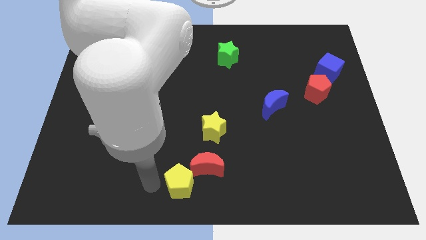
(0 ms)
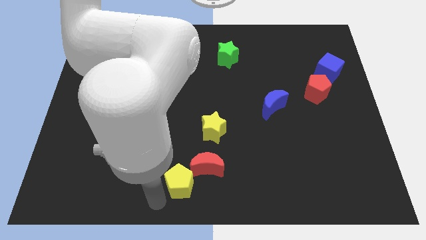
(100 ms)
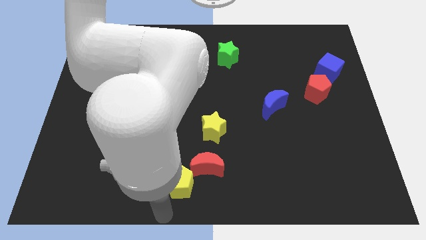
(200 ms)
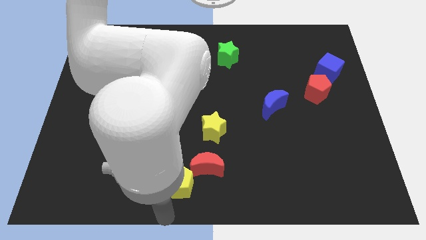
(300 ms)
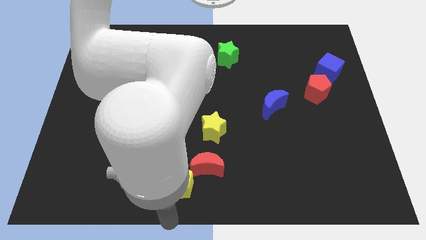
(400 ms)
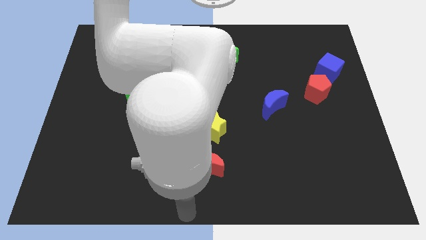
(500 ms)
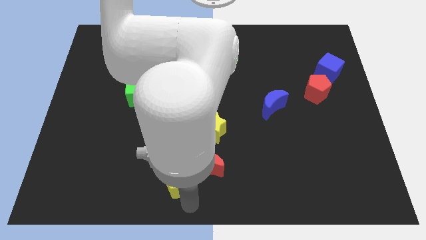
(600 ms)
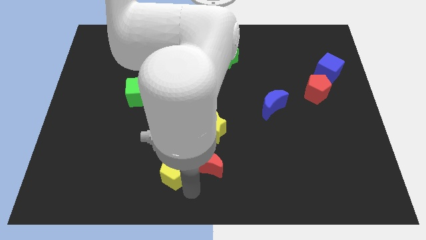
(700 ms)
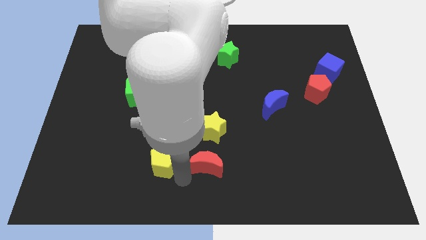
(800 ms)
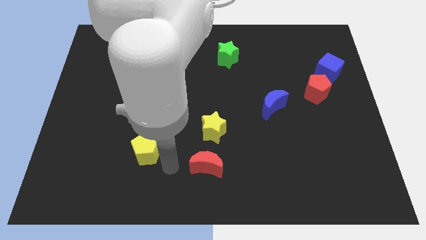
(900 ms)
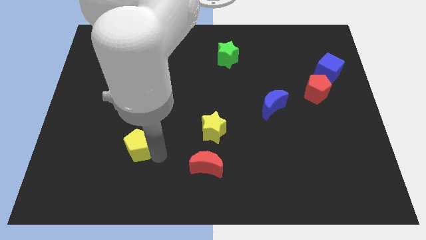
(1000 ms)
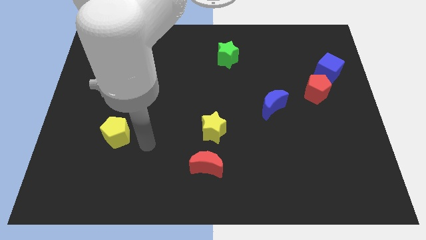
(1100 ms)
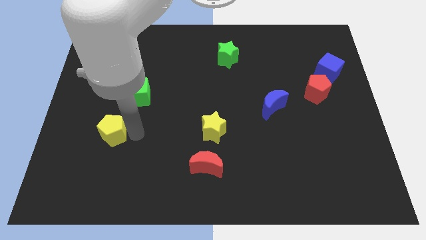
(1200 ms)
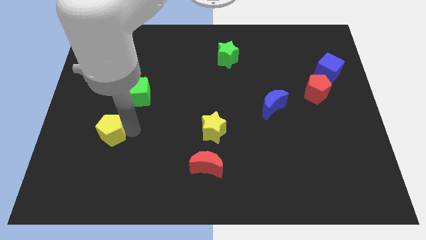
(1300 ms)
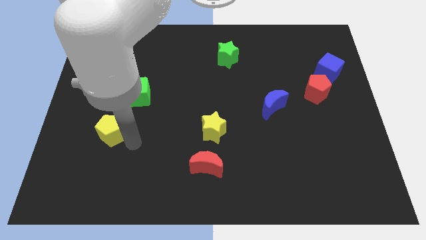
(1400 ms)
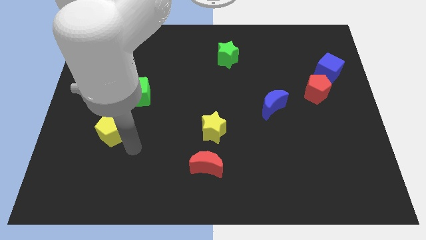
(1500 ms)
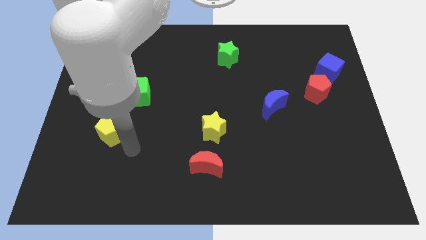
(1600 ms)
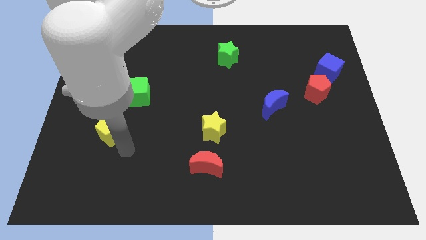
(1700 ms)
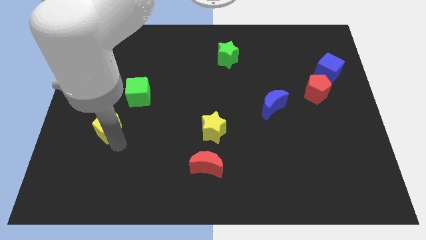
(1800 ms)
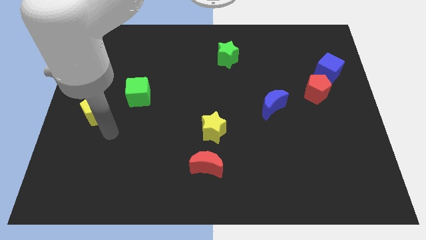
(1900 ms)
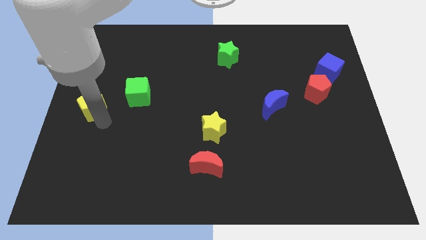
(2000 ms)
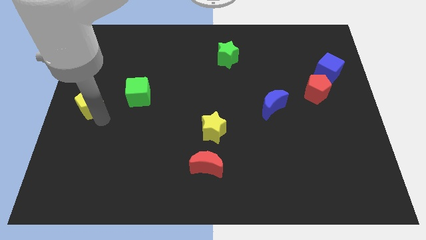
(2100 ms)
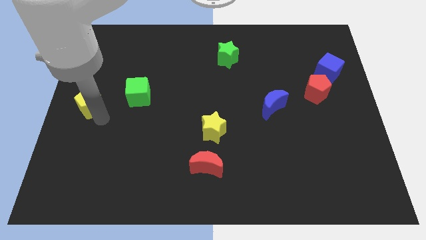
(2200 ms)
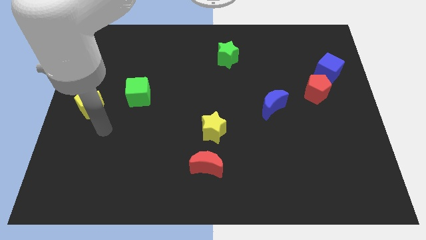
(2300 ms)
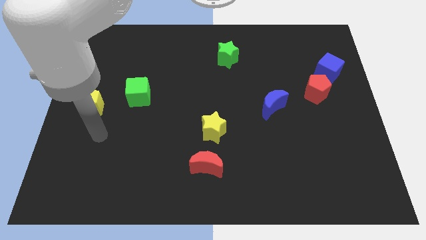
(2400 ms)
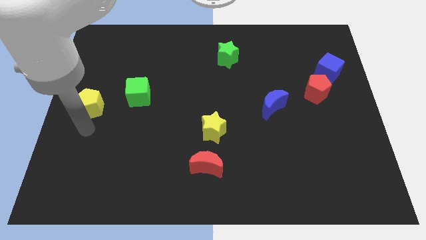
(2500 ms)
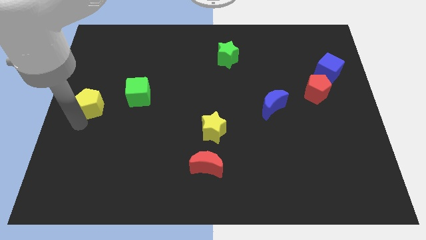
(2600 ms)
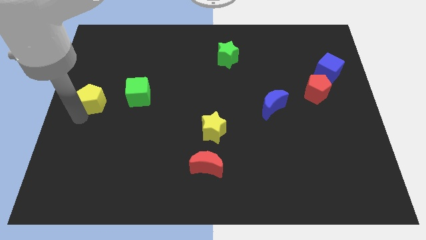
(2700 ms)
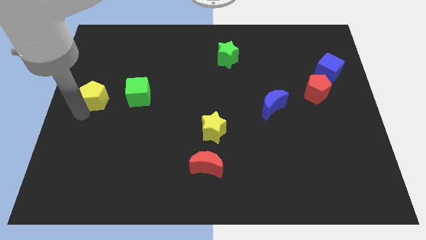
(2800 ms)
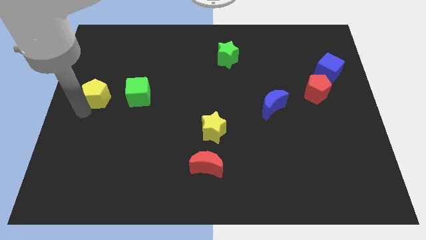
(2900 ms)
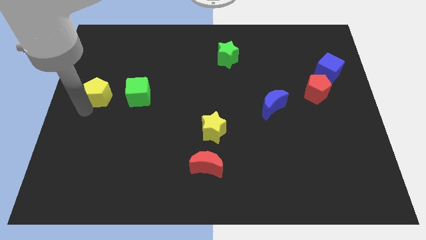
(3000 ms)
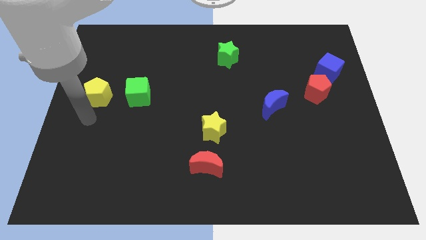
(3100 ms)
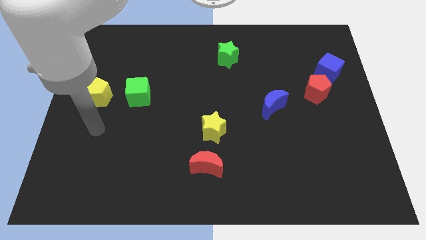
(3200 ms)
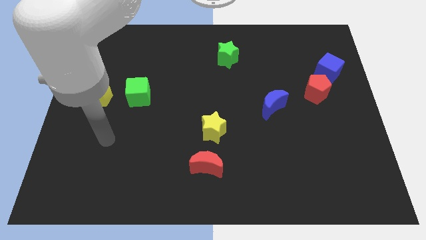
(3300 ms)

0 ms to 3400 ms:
move the yellow pentagon to the left center

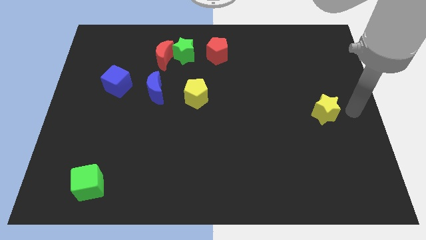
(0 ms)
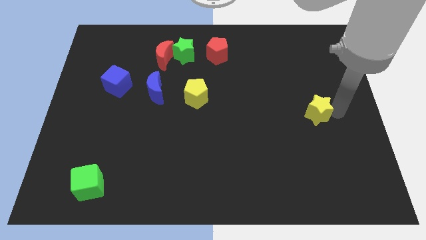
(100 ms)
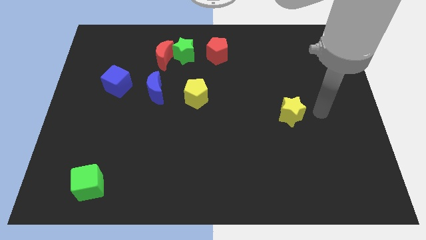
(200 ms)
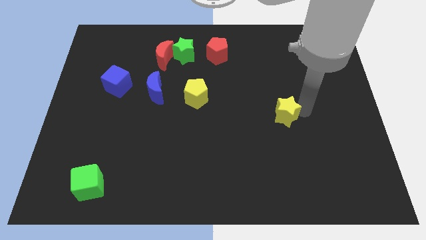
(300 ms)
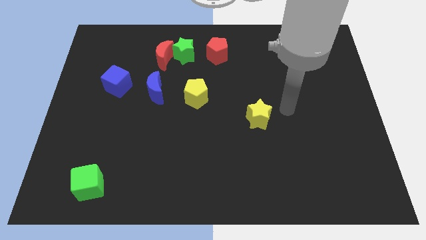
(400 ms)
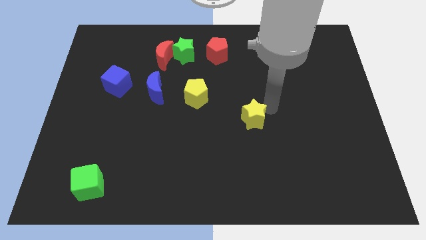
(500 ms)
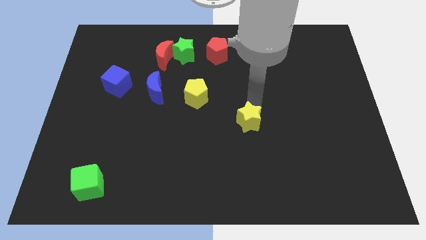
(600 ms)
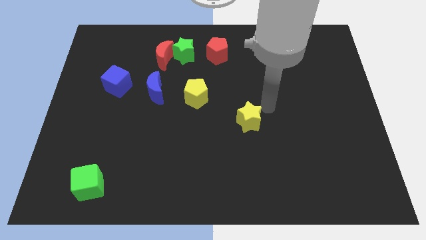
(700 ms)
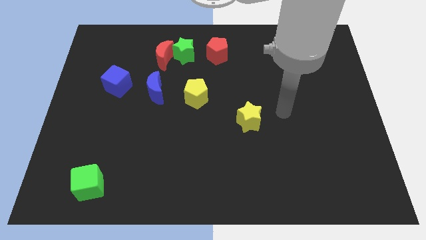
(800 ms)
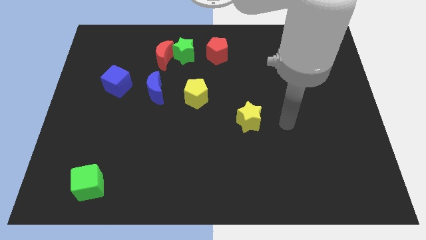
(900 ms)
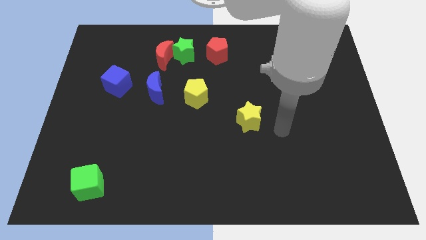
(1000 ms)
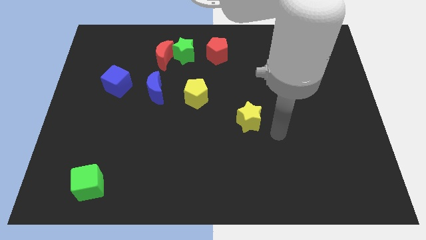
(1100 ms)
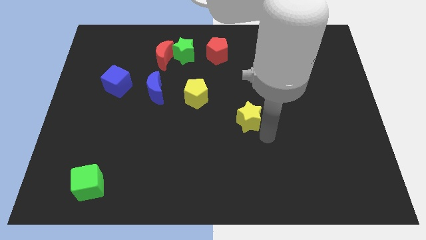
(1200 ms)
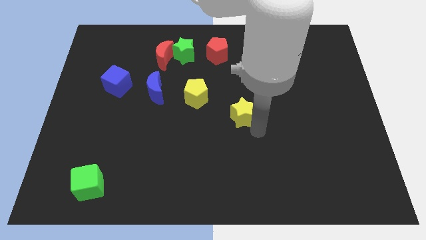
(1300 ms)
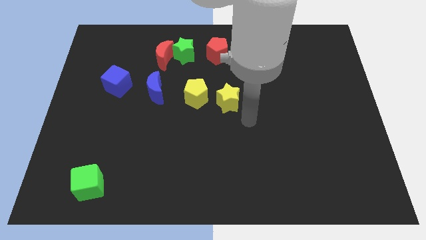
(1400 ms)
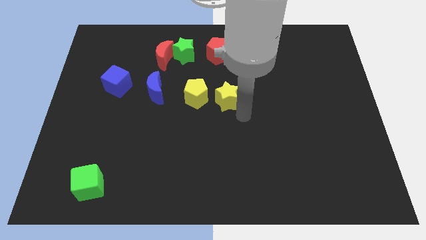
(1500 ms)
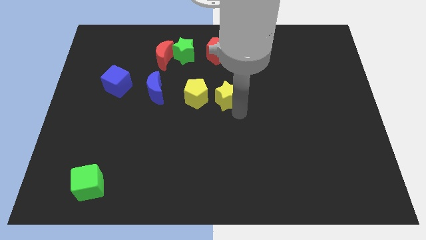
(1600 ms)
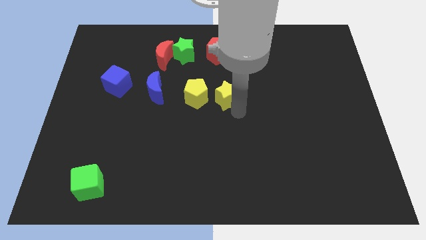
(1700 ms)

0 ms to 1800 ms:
place the yellow star to the right side of the yellow pentagon

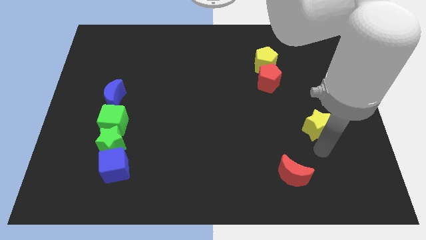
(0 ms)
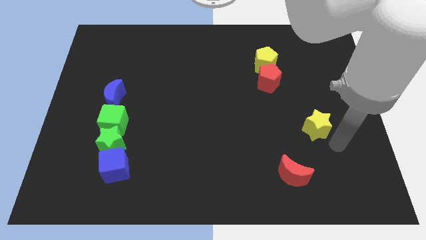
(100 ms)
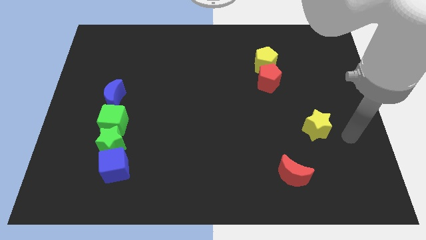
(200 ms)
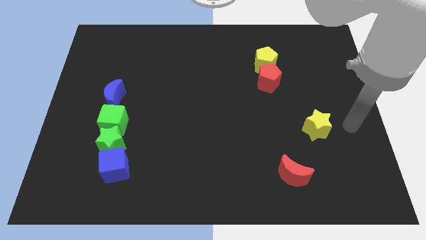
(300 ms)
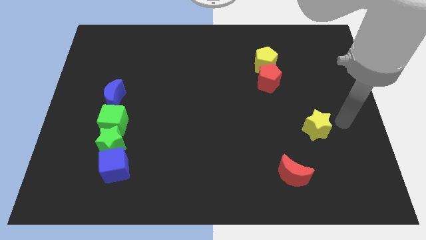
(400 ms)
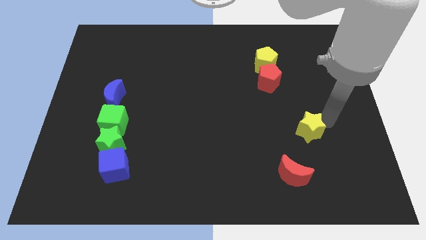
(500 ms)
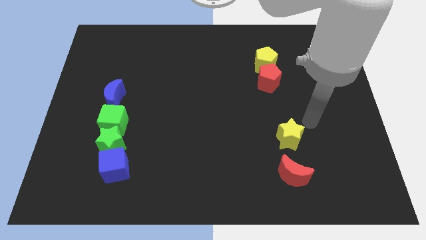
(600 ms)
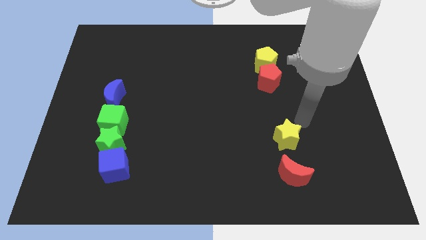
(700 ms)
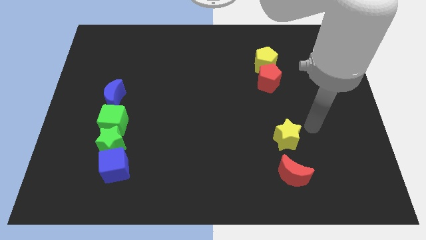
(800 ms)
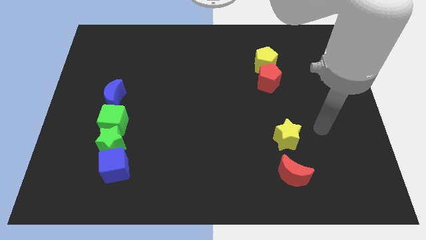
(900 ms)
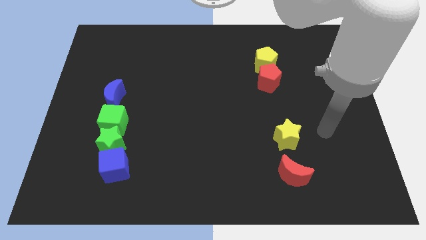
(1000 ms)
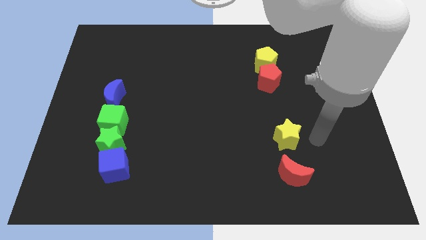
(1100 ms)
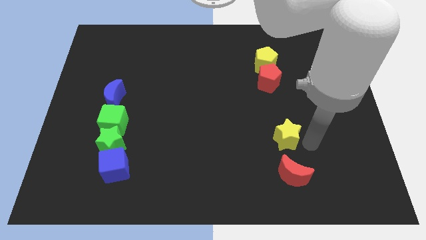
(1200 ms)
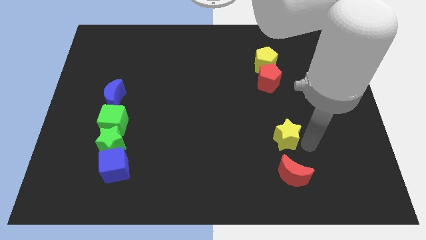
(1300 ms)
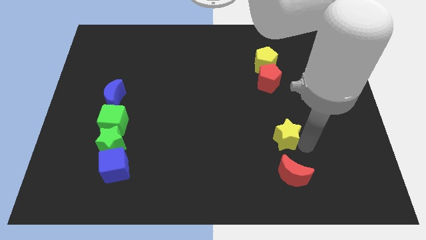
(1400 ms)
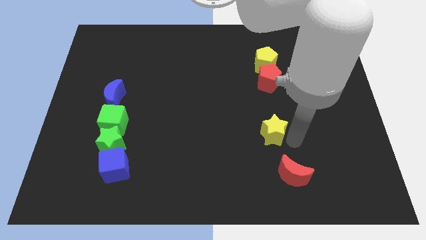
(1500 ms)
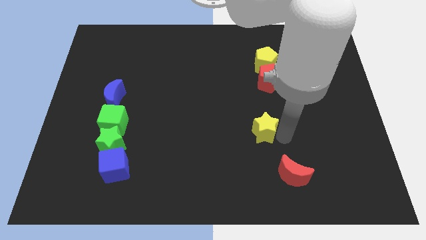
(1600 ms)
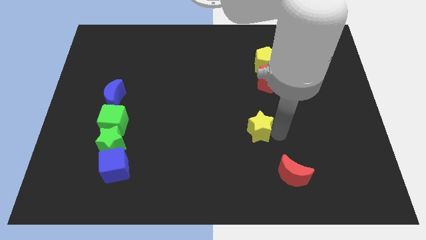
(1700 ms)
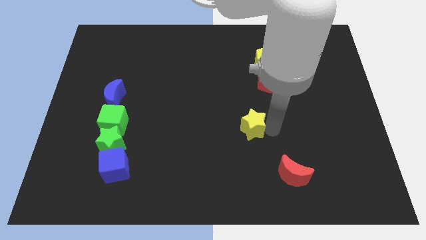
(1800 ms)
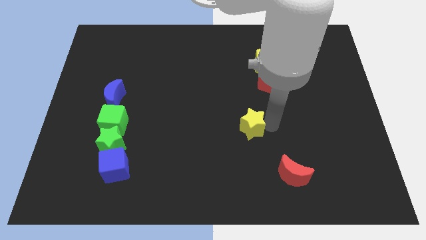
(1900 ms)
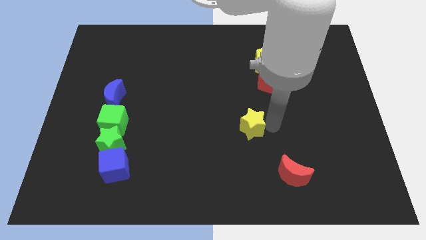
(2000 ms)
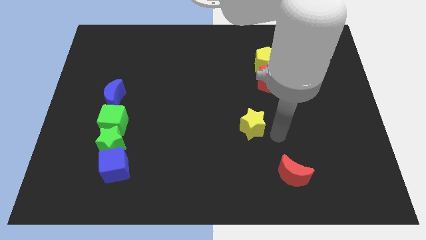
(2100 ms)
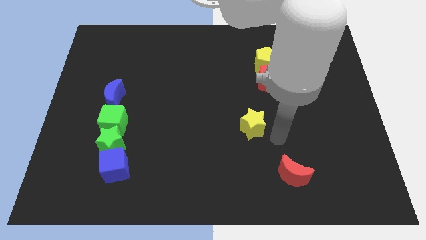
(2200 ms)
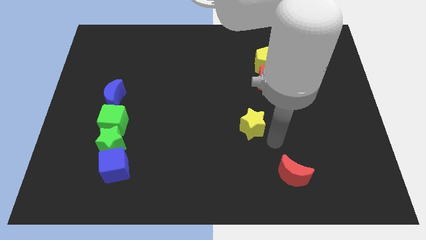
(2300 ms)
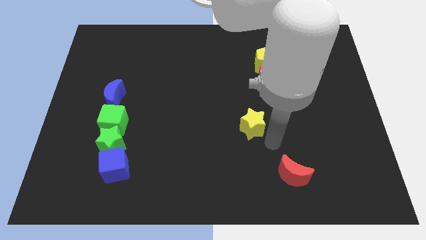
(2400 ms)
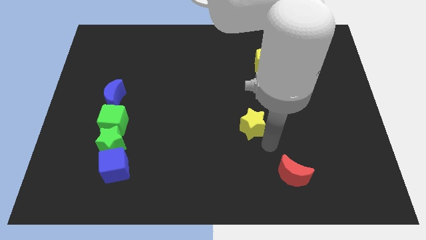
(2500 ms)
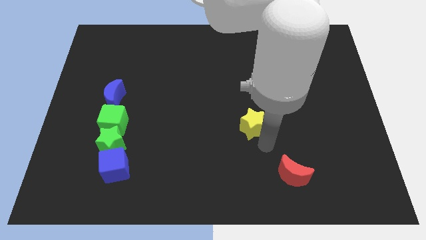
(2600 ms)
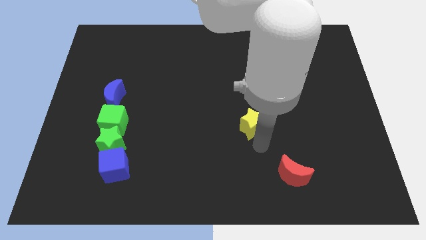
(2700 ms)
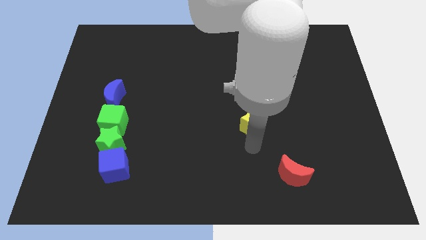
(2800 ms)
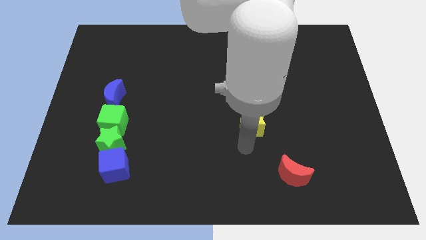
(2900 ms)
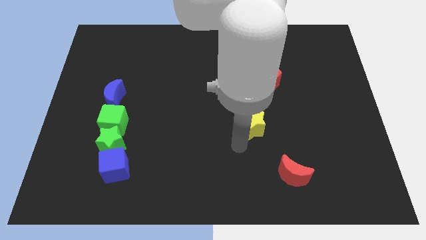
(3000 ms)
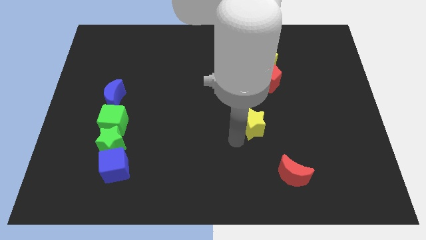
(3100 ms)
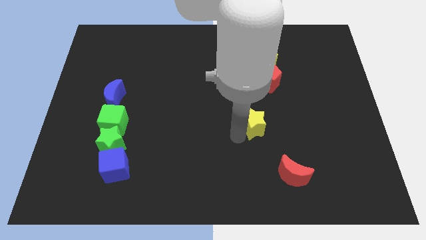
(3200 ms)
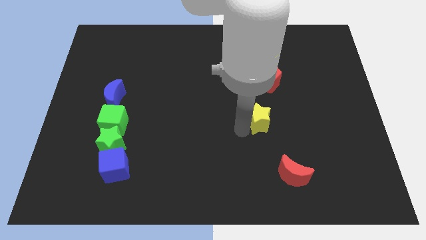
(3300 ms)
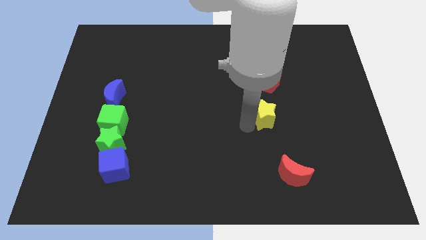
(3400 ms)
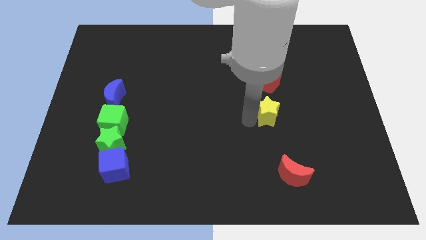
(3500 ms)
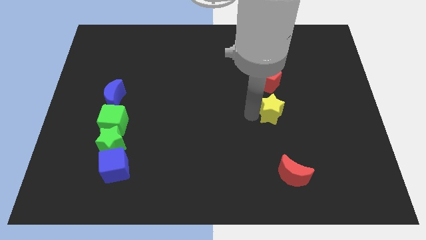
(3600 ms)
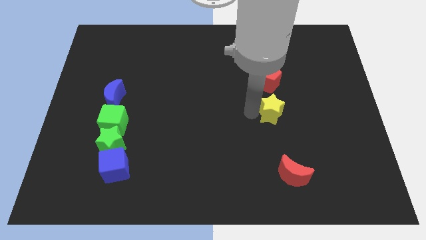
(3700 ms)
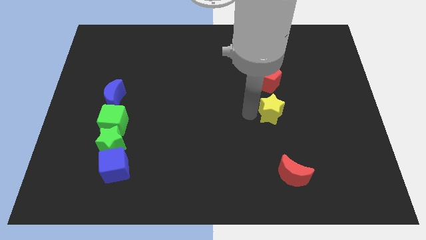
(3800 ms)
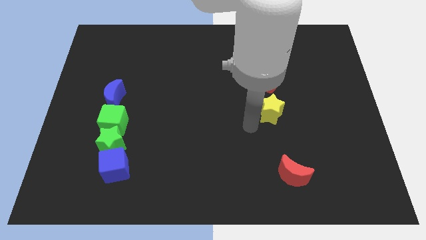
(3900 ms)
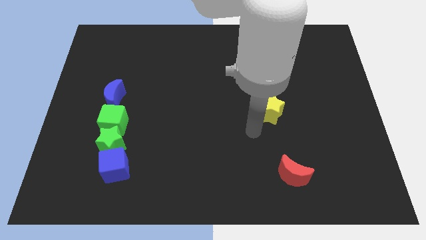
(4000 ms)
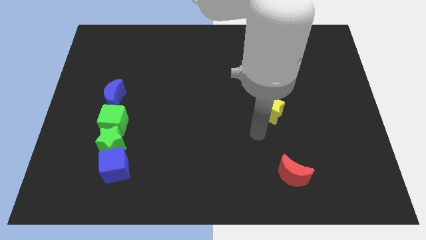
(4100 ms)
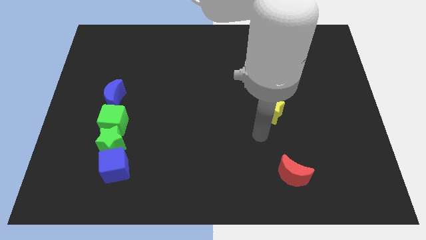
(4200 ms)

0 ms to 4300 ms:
push the yellow star below the red pentagon
